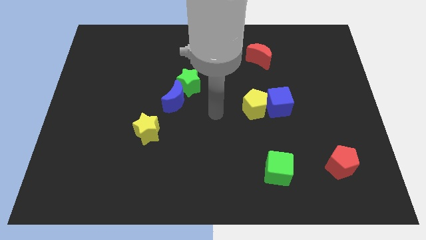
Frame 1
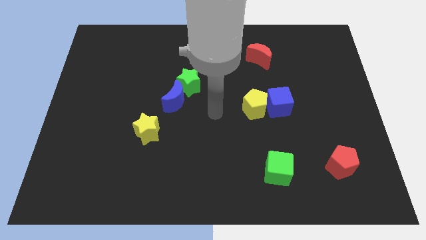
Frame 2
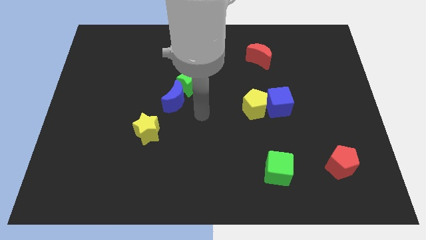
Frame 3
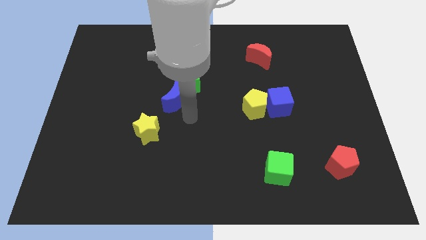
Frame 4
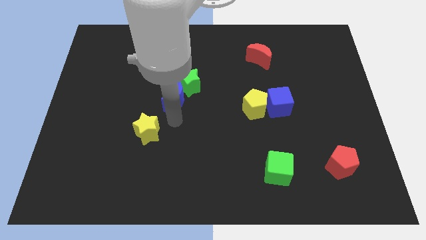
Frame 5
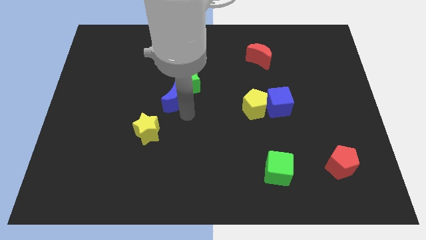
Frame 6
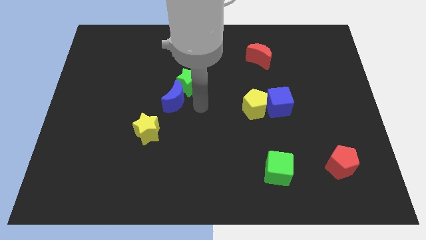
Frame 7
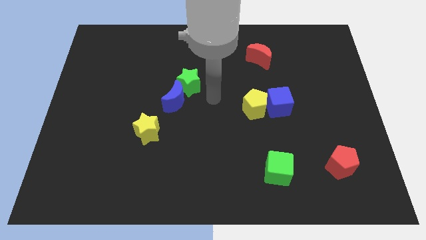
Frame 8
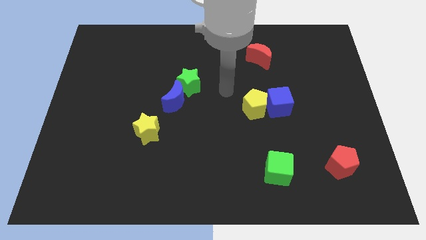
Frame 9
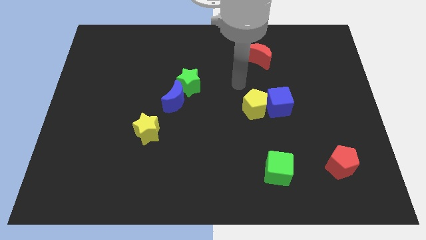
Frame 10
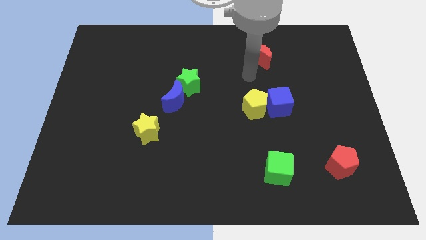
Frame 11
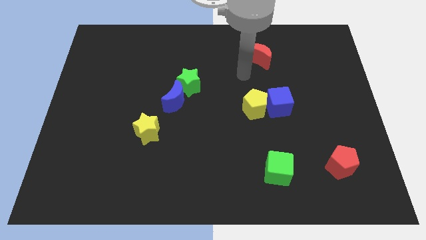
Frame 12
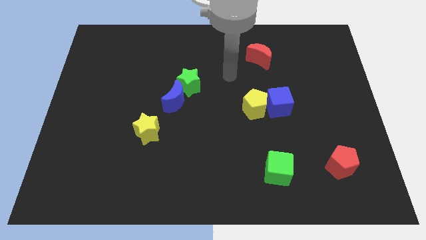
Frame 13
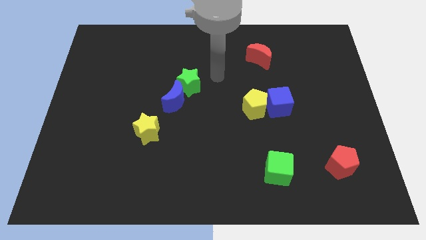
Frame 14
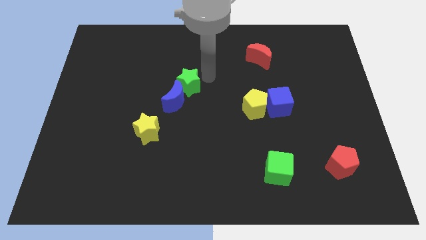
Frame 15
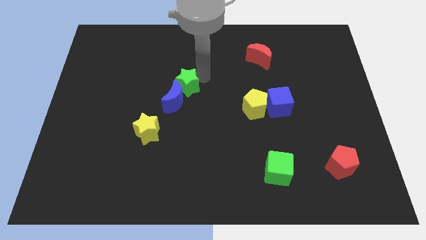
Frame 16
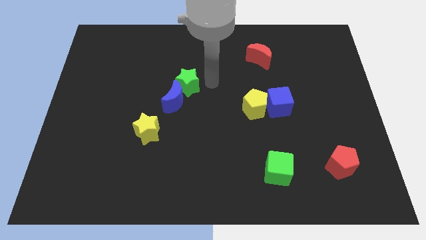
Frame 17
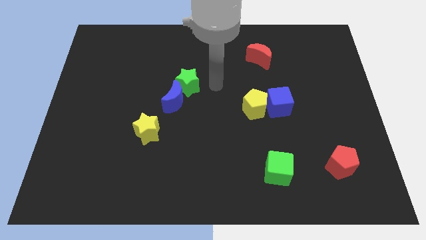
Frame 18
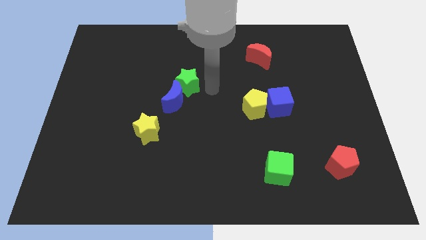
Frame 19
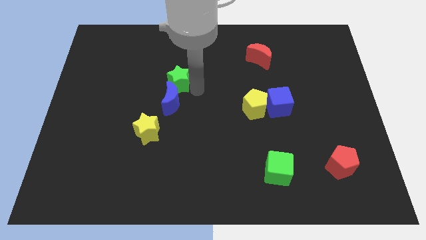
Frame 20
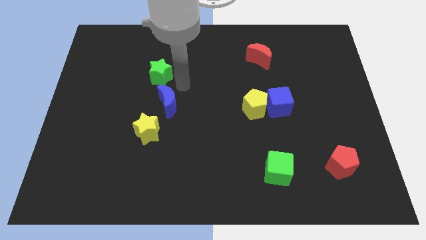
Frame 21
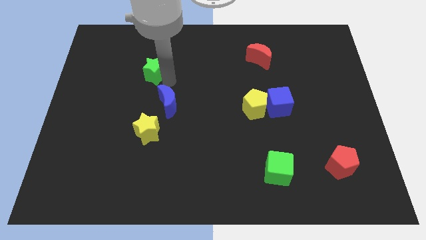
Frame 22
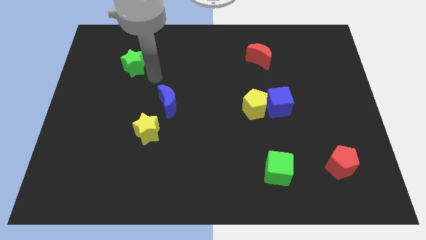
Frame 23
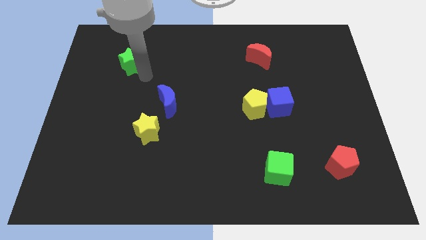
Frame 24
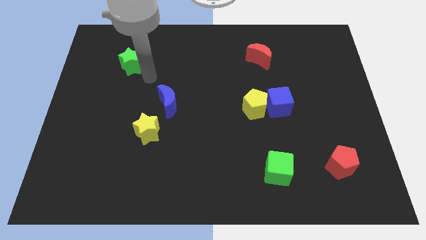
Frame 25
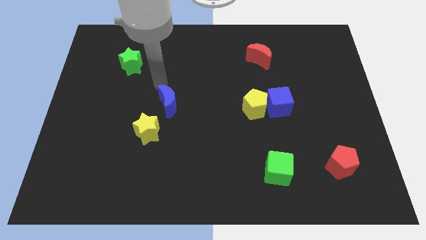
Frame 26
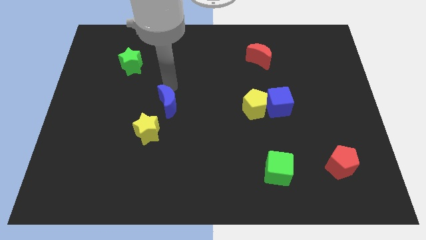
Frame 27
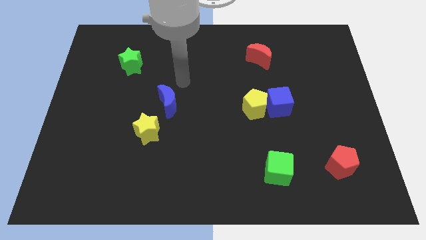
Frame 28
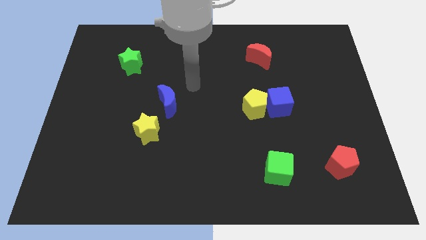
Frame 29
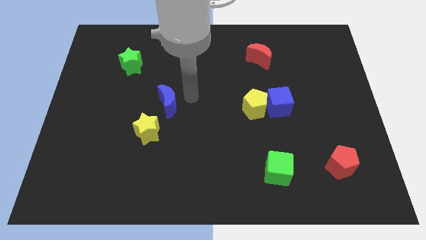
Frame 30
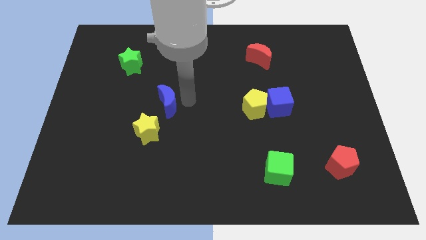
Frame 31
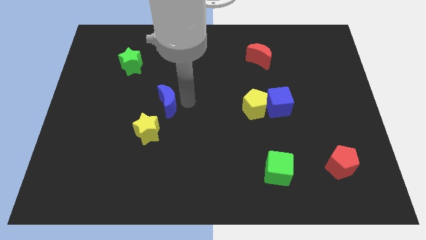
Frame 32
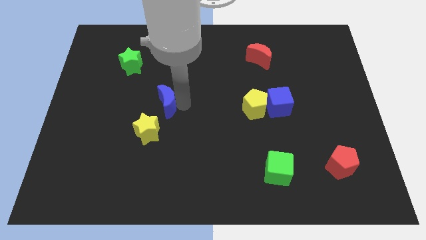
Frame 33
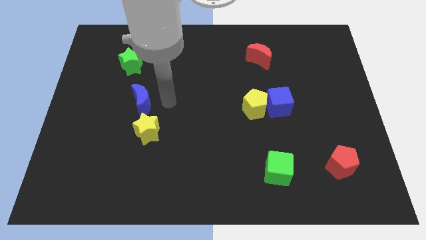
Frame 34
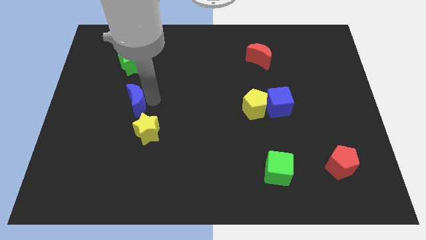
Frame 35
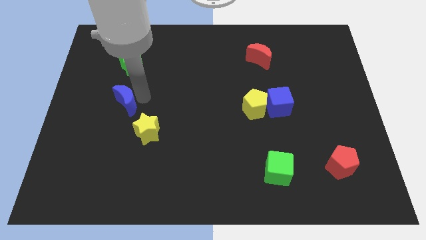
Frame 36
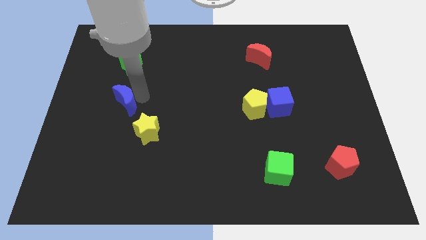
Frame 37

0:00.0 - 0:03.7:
place the green star and blue moon in a vertical line at top left side of the yellow star

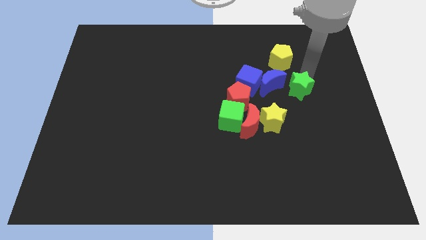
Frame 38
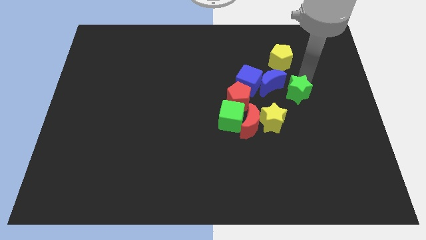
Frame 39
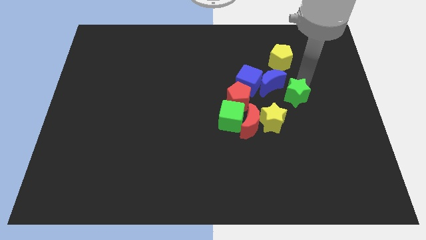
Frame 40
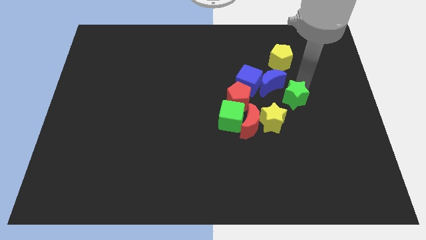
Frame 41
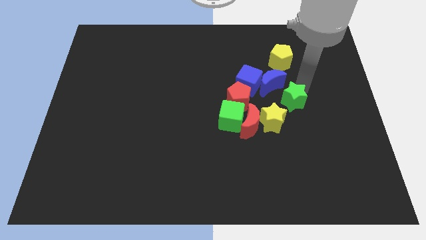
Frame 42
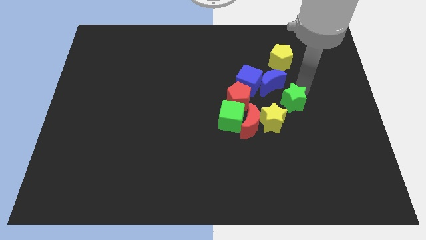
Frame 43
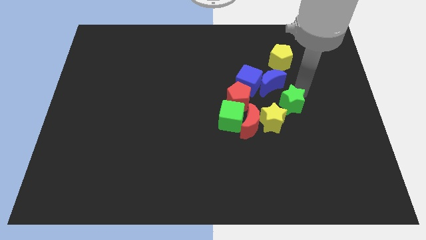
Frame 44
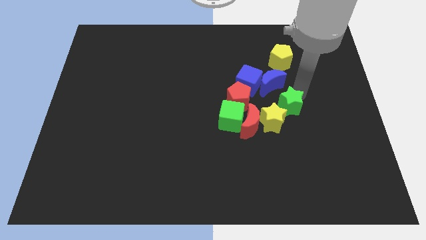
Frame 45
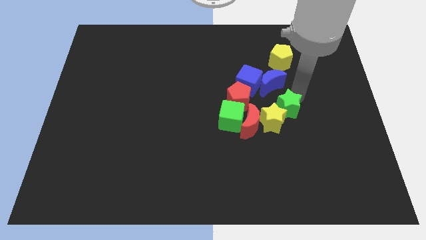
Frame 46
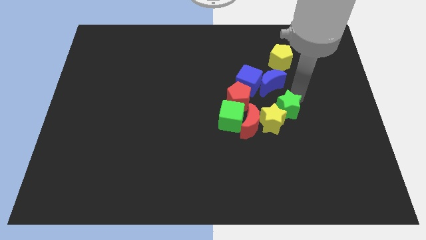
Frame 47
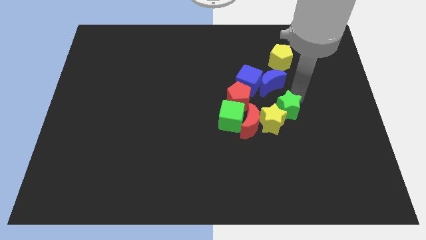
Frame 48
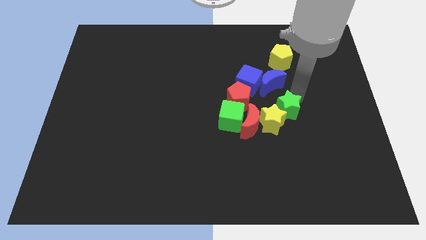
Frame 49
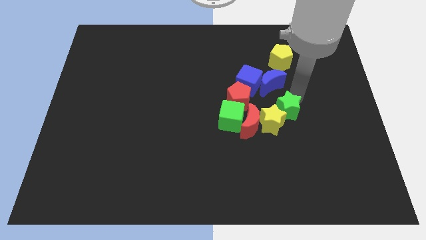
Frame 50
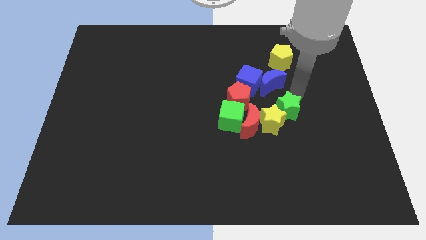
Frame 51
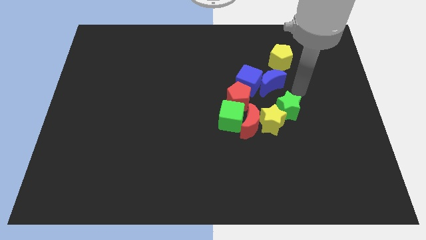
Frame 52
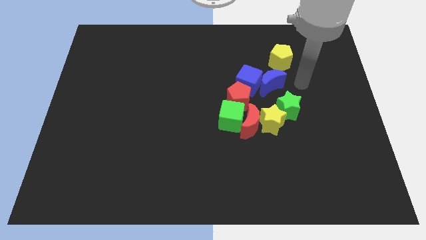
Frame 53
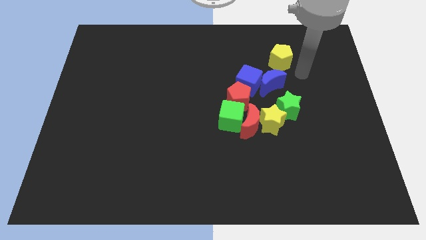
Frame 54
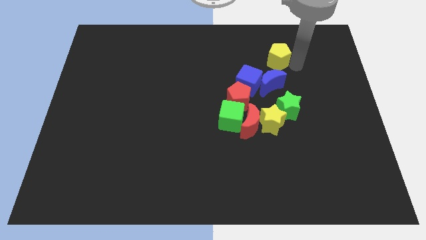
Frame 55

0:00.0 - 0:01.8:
move the green star to the top right side of the yellow star

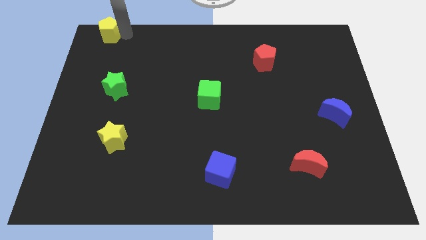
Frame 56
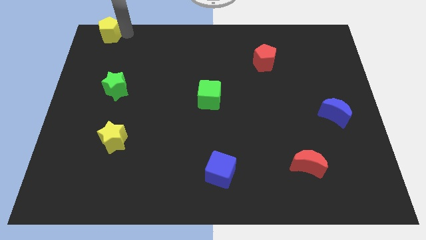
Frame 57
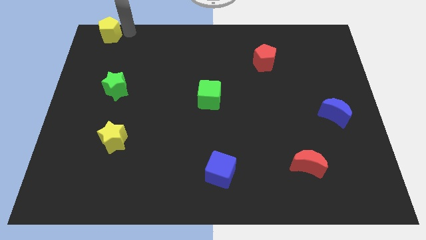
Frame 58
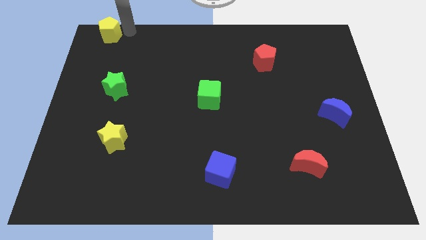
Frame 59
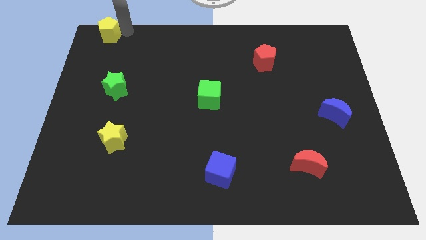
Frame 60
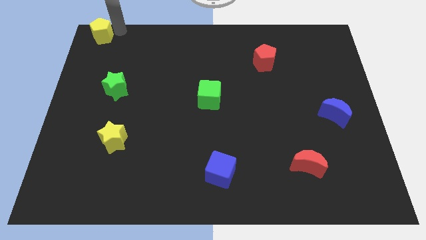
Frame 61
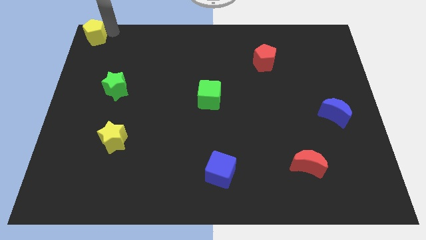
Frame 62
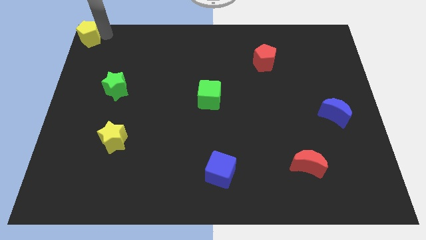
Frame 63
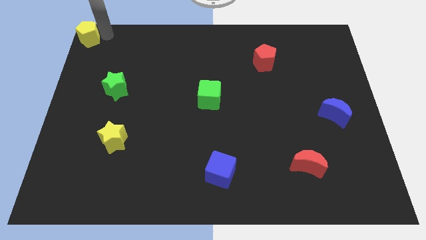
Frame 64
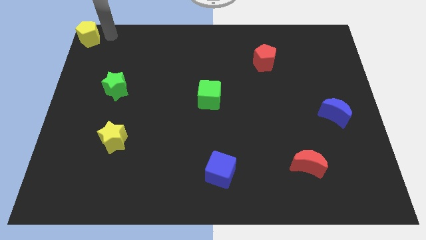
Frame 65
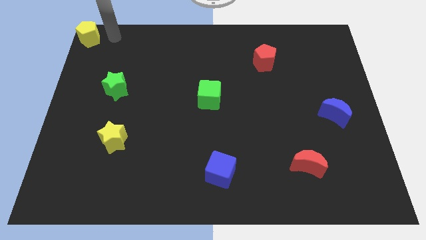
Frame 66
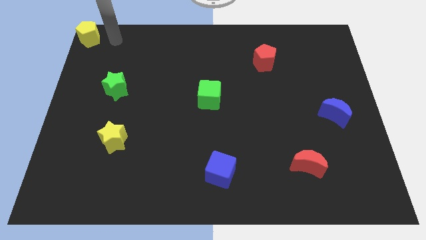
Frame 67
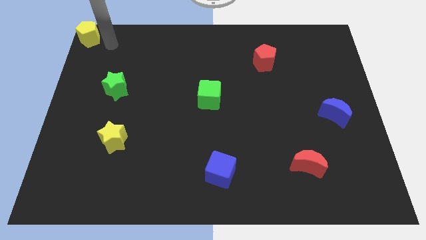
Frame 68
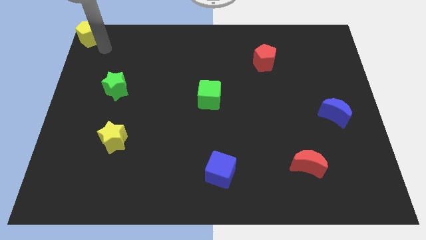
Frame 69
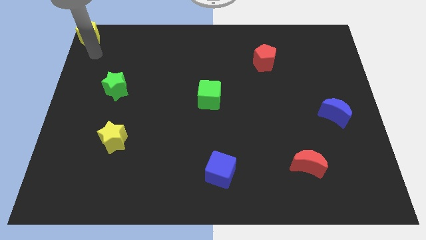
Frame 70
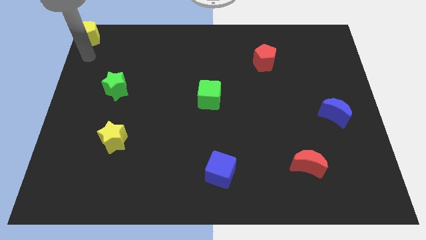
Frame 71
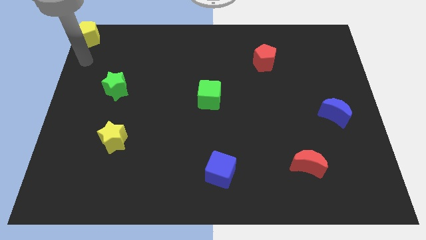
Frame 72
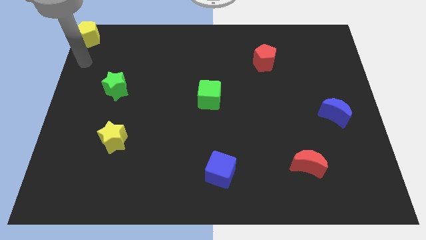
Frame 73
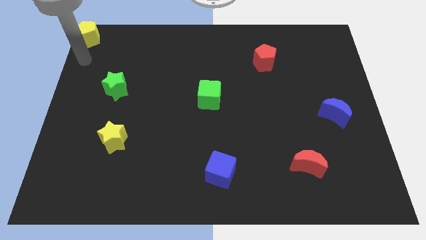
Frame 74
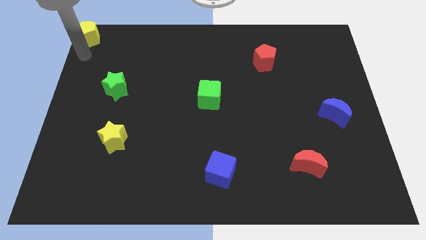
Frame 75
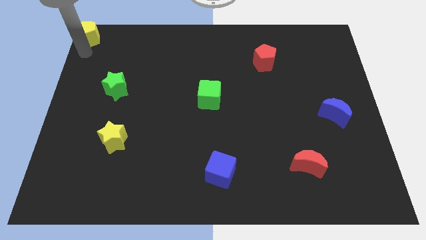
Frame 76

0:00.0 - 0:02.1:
place the yellow pentagon towards the top left corner of the board

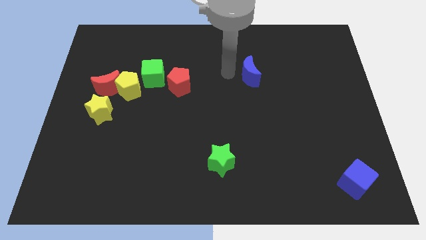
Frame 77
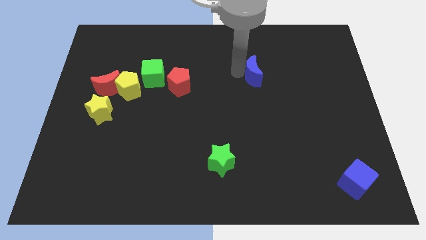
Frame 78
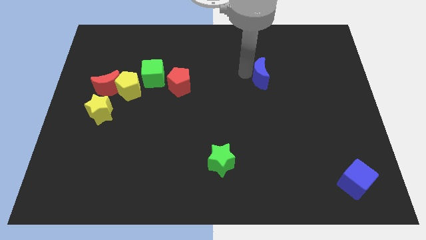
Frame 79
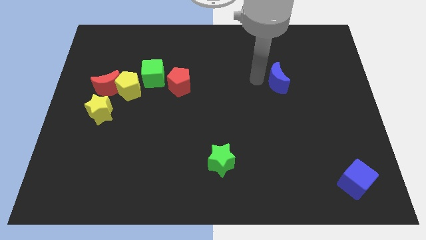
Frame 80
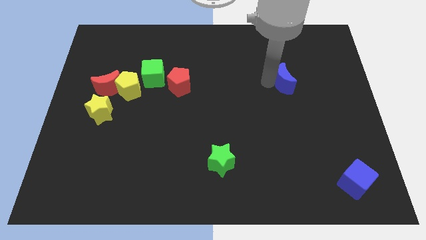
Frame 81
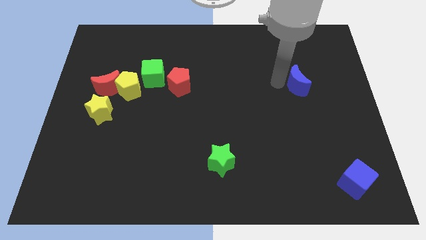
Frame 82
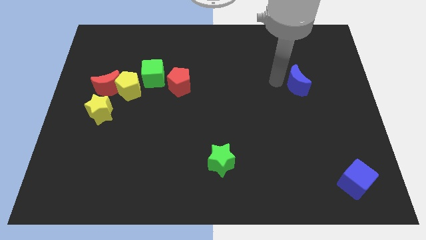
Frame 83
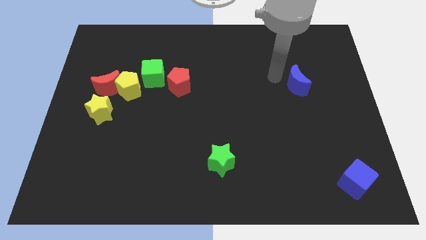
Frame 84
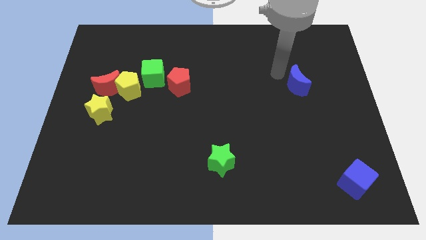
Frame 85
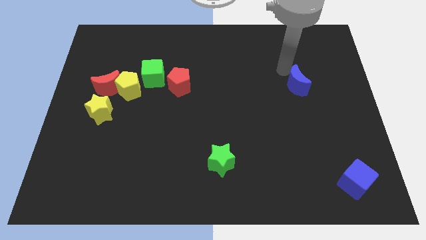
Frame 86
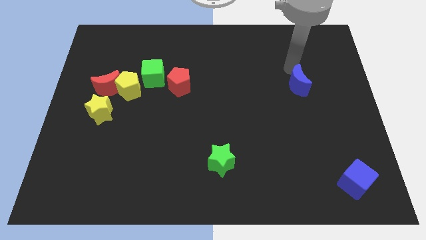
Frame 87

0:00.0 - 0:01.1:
place blue moon diagonal to the green star

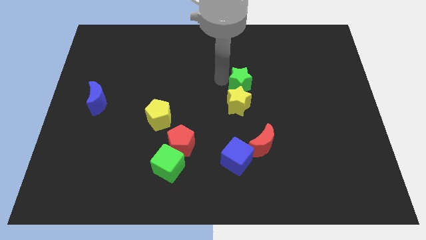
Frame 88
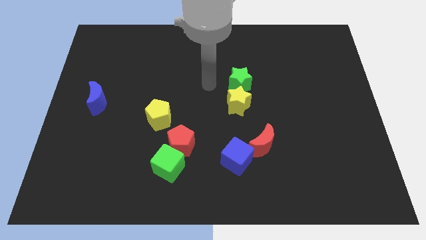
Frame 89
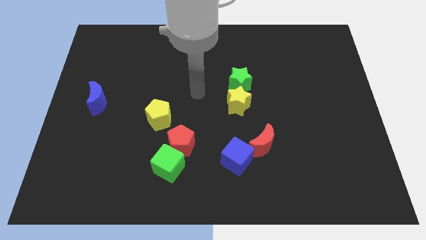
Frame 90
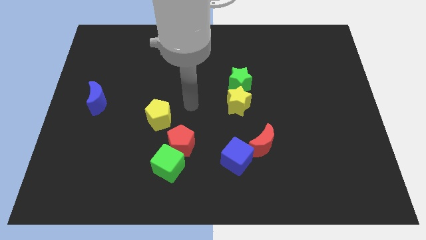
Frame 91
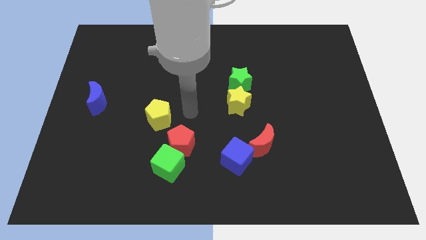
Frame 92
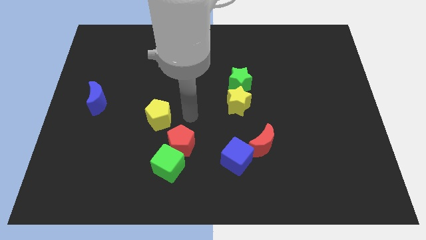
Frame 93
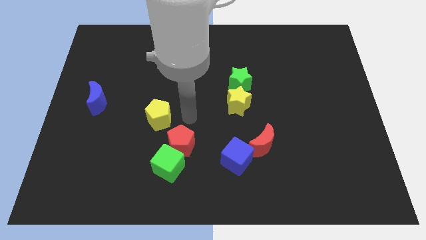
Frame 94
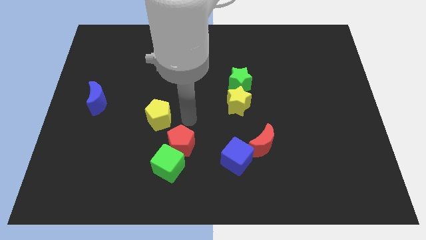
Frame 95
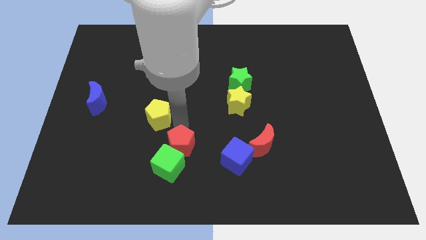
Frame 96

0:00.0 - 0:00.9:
point your arm at the top of the red pentagon
